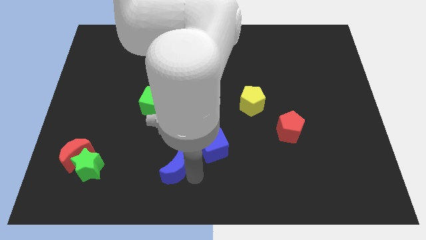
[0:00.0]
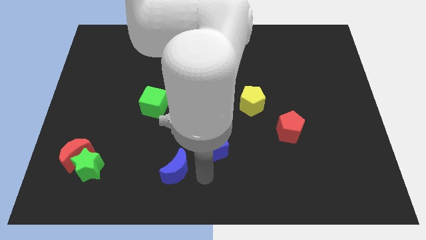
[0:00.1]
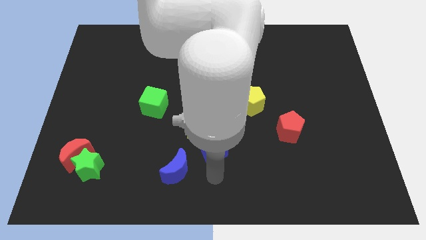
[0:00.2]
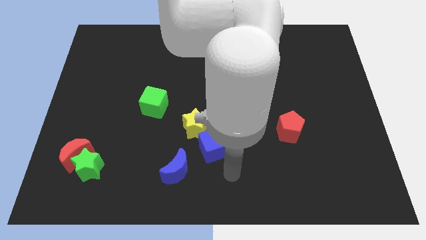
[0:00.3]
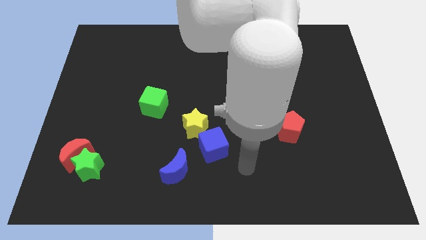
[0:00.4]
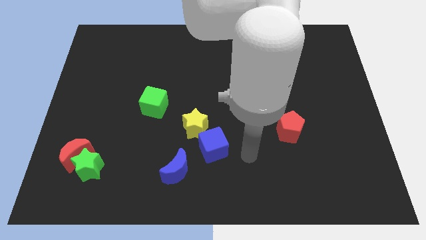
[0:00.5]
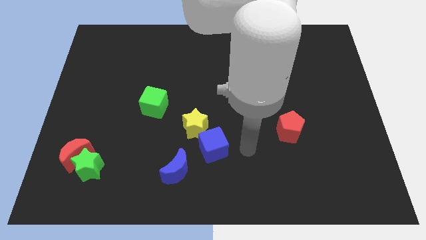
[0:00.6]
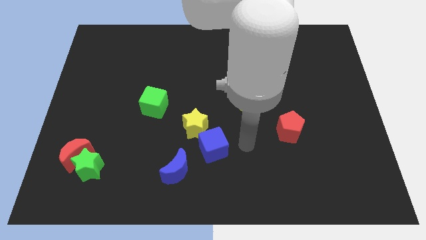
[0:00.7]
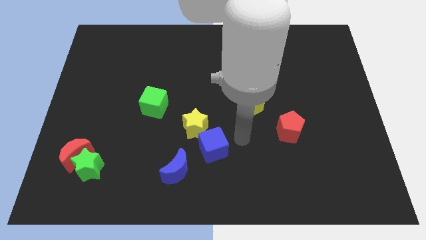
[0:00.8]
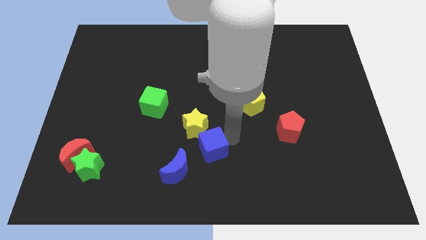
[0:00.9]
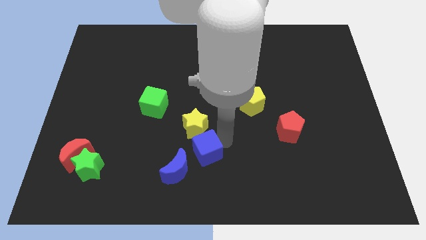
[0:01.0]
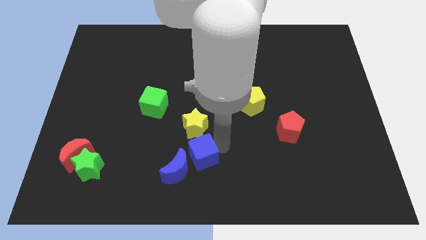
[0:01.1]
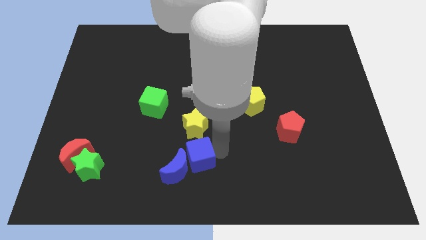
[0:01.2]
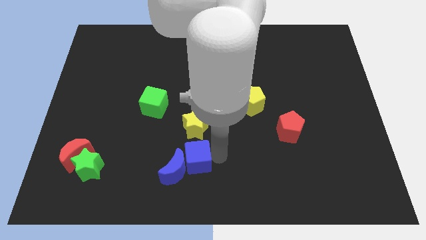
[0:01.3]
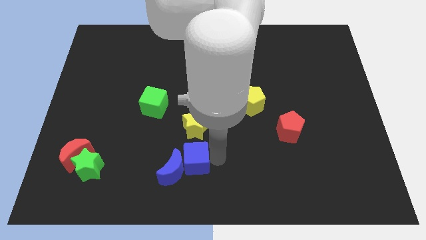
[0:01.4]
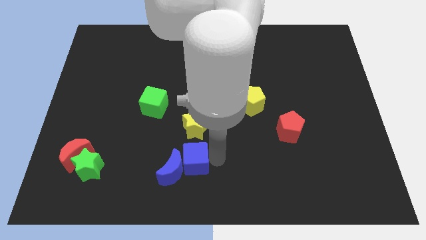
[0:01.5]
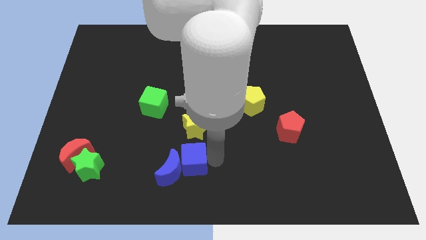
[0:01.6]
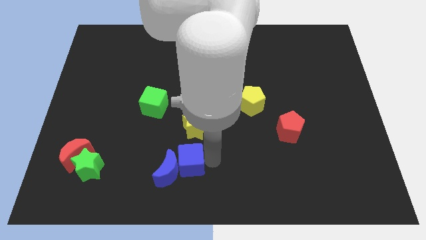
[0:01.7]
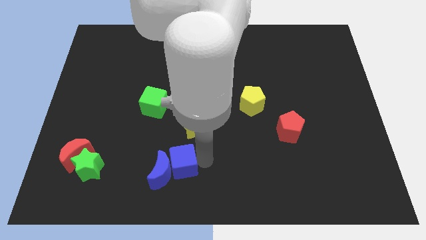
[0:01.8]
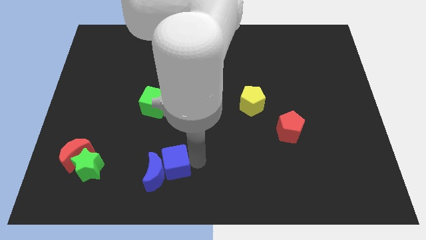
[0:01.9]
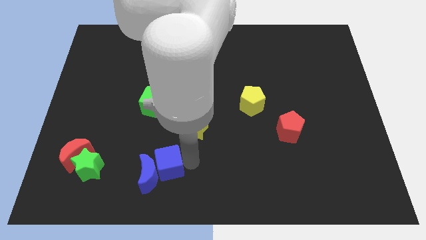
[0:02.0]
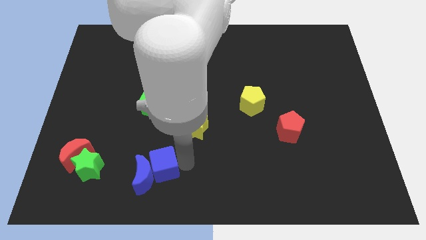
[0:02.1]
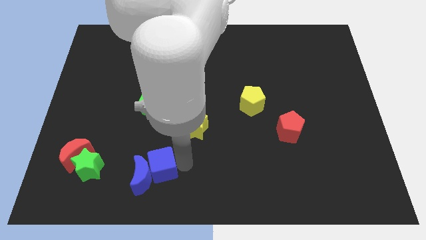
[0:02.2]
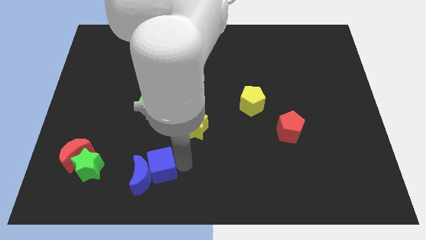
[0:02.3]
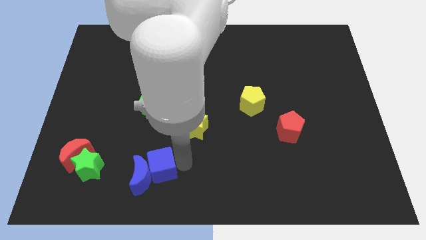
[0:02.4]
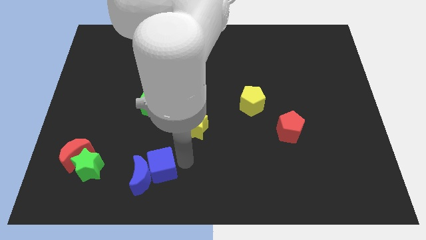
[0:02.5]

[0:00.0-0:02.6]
push the blue cube into the blue crescent

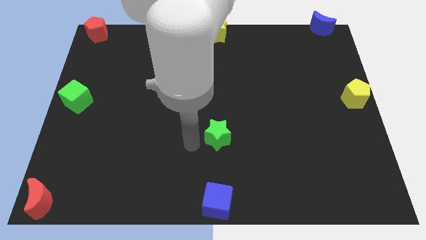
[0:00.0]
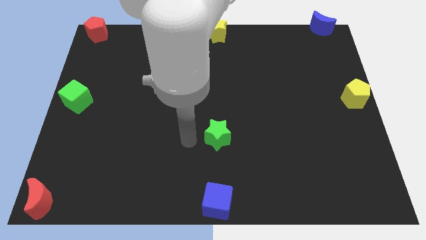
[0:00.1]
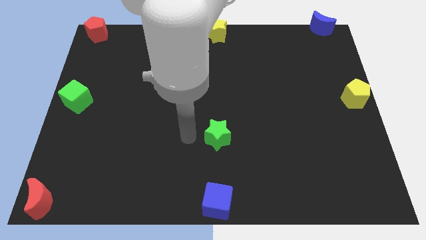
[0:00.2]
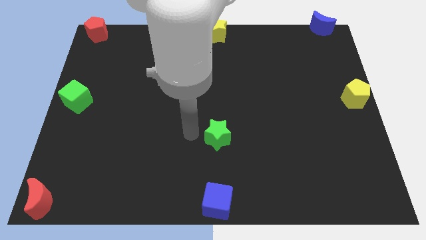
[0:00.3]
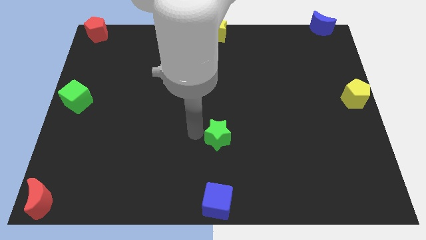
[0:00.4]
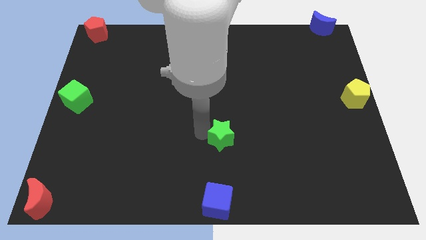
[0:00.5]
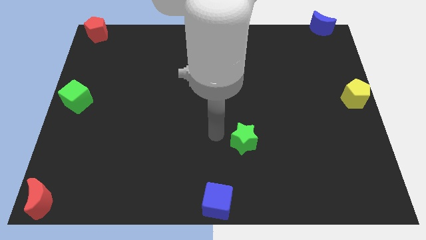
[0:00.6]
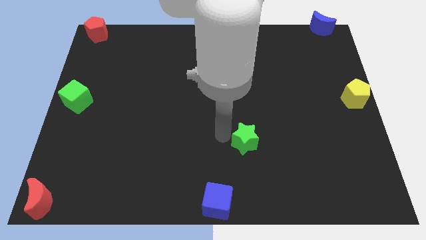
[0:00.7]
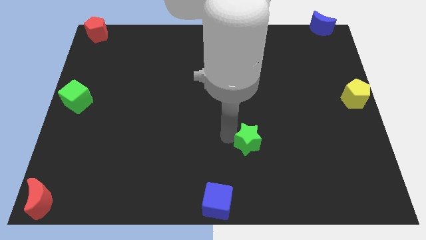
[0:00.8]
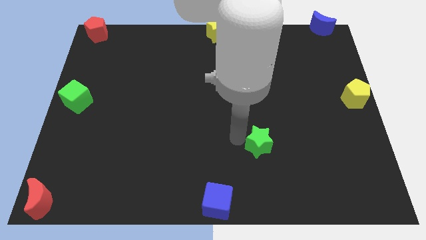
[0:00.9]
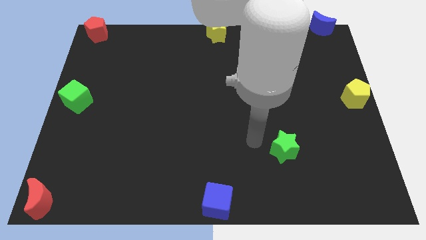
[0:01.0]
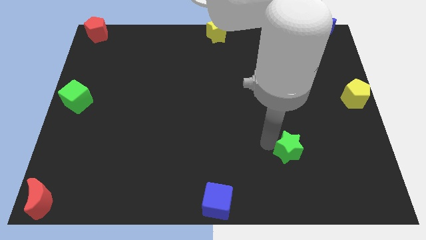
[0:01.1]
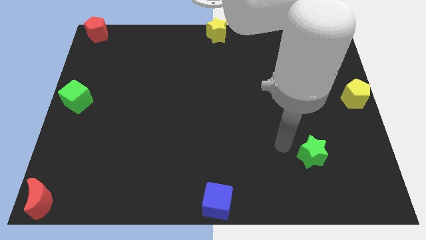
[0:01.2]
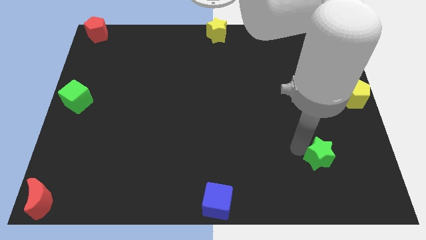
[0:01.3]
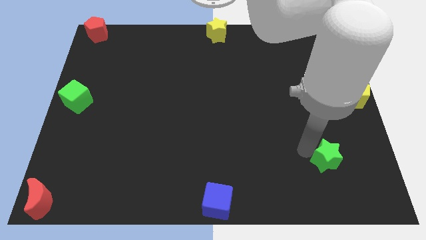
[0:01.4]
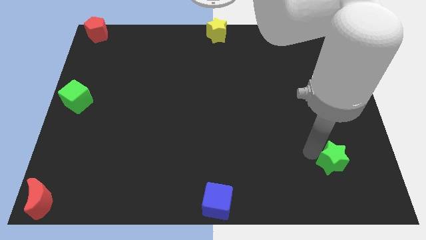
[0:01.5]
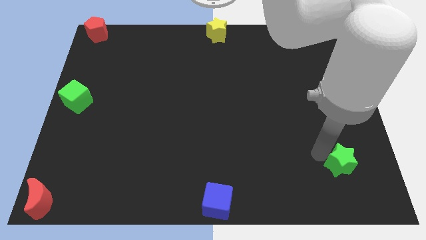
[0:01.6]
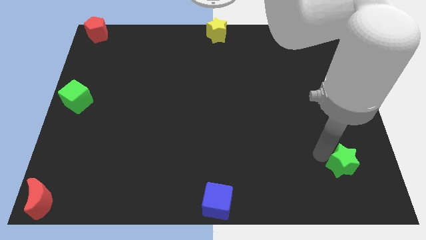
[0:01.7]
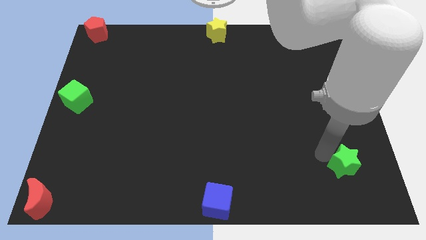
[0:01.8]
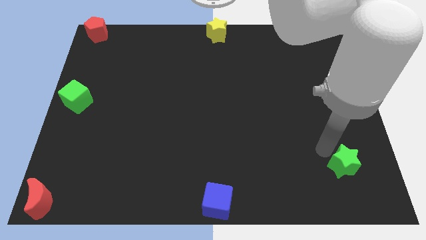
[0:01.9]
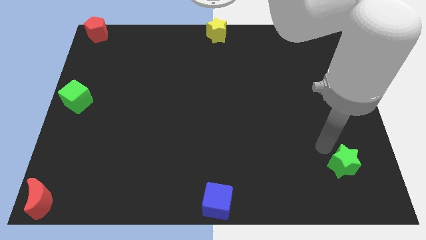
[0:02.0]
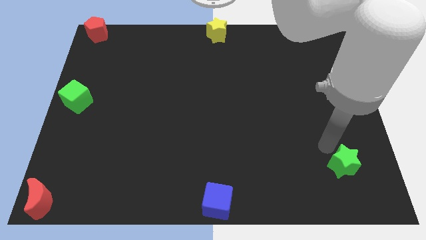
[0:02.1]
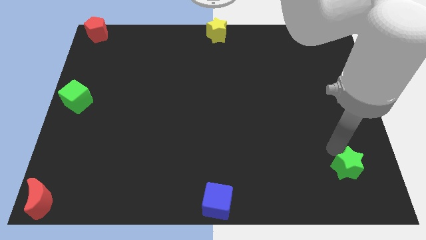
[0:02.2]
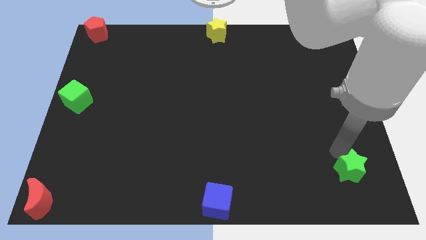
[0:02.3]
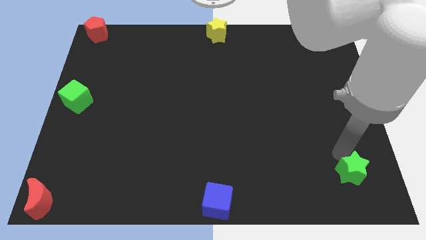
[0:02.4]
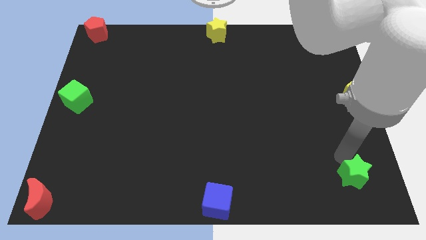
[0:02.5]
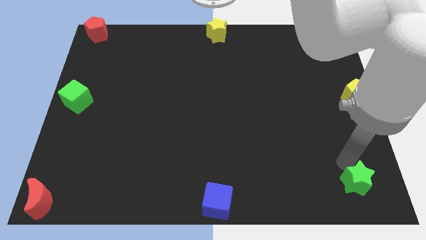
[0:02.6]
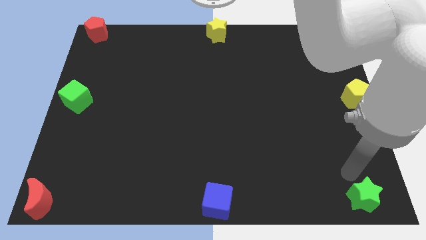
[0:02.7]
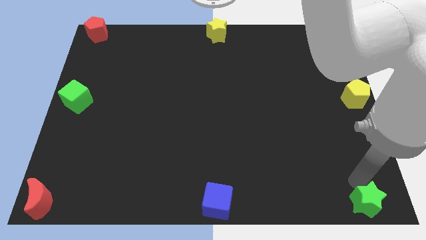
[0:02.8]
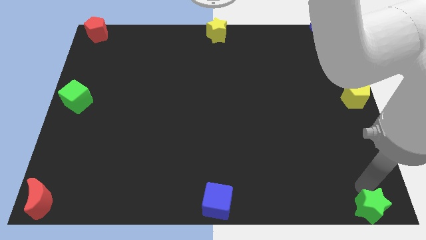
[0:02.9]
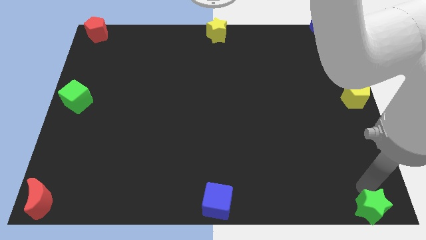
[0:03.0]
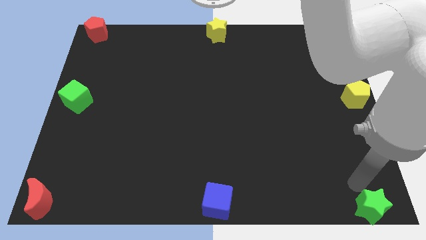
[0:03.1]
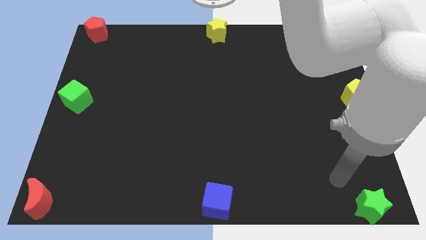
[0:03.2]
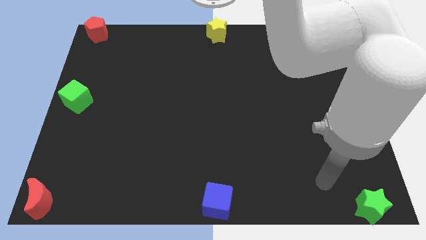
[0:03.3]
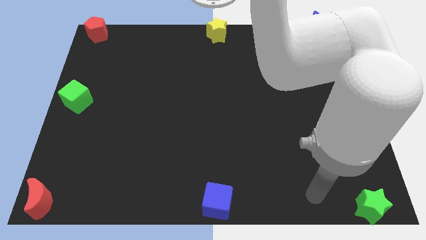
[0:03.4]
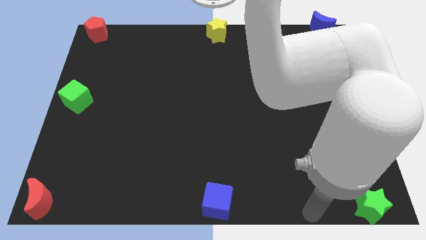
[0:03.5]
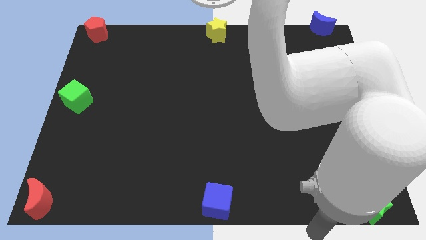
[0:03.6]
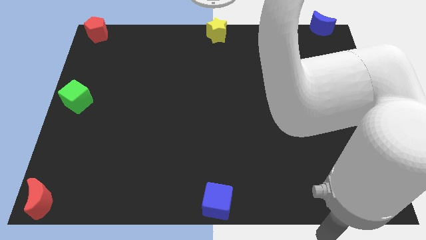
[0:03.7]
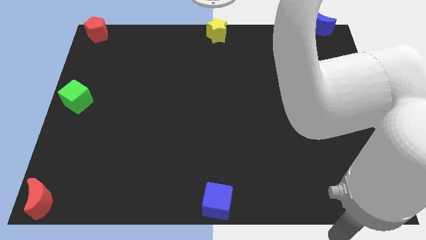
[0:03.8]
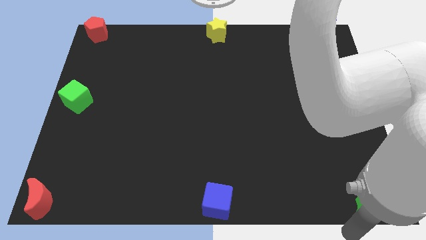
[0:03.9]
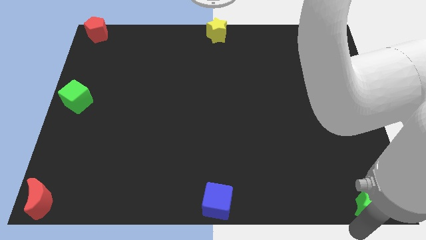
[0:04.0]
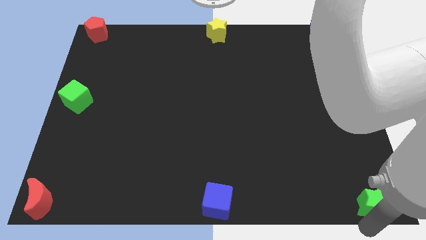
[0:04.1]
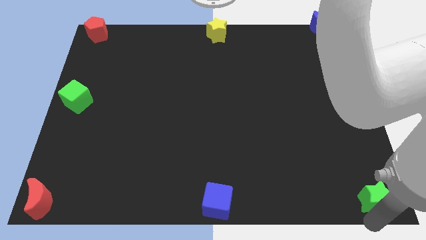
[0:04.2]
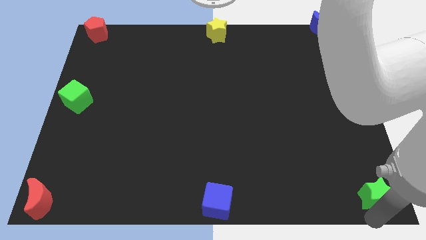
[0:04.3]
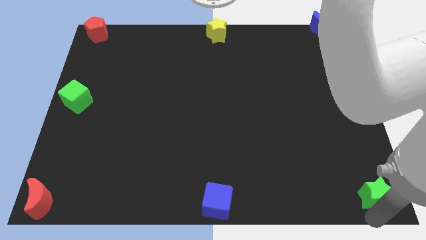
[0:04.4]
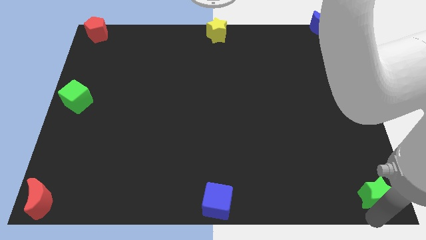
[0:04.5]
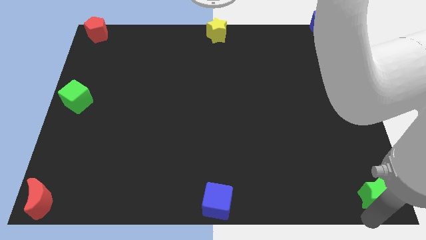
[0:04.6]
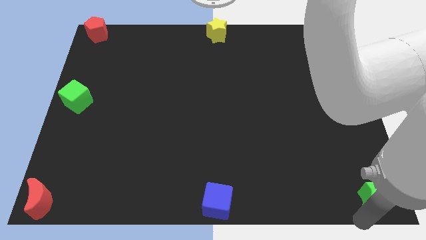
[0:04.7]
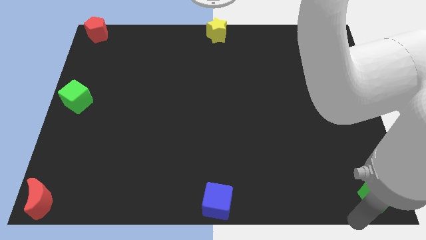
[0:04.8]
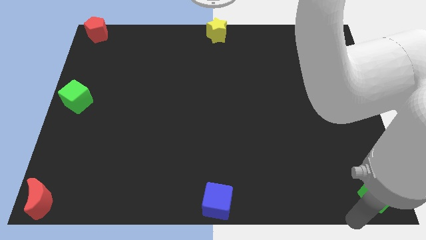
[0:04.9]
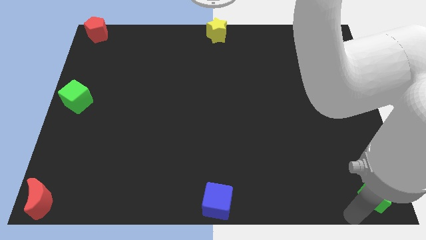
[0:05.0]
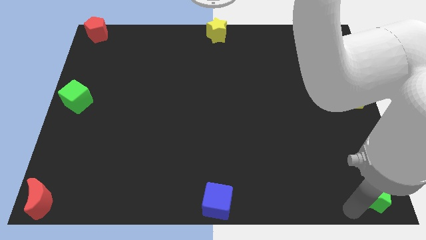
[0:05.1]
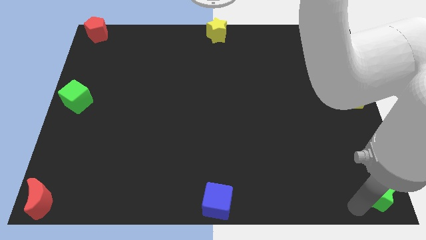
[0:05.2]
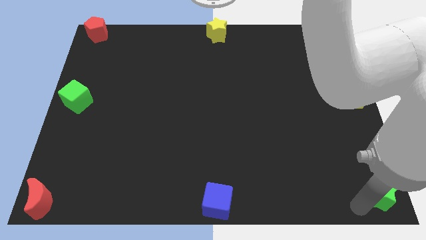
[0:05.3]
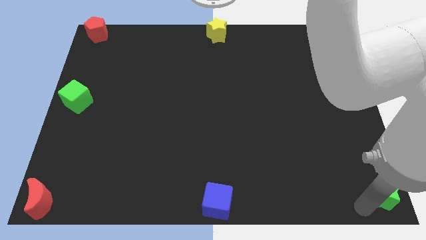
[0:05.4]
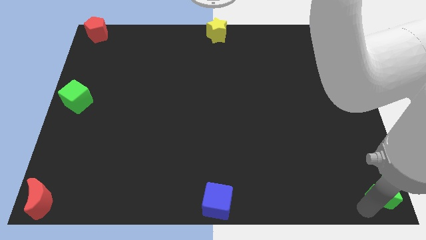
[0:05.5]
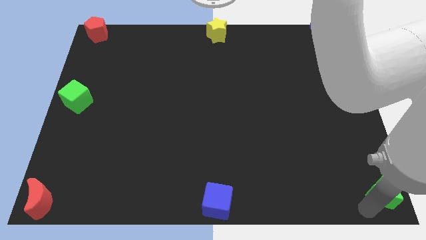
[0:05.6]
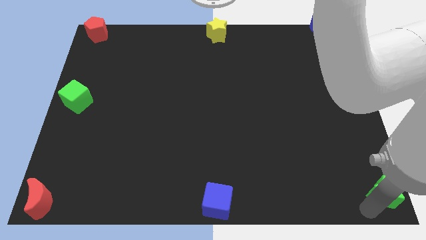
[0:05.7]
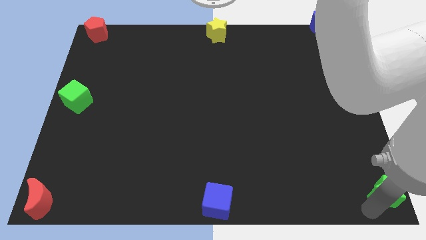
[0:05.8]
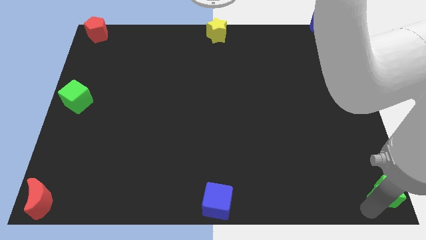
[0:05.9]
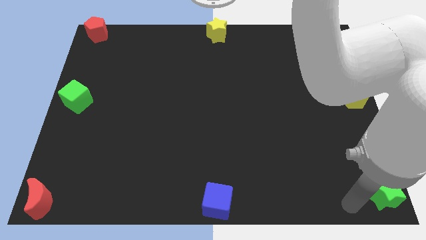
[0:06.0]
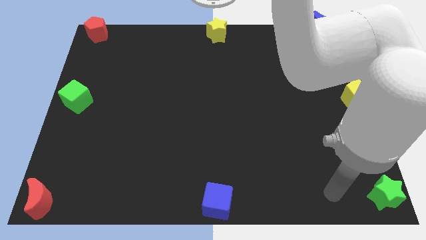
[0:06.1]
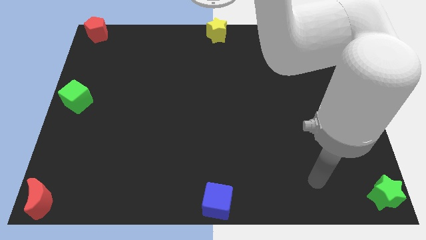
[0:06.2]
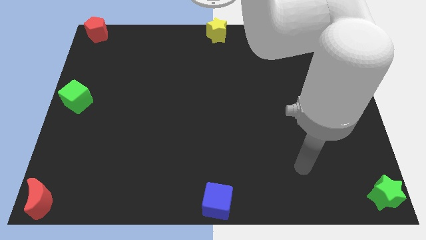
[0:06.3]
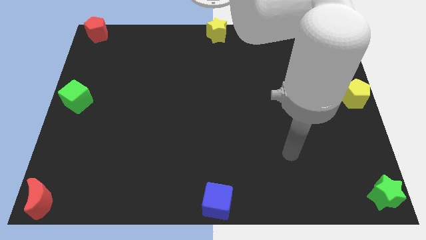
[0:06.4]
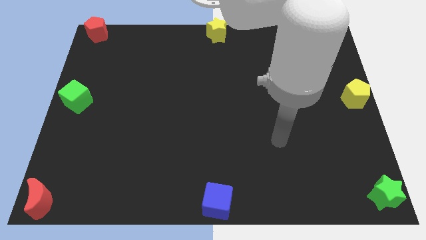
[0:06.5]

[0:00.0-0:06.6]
move the green star to the bottom right corner of the board
